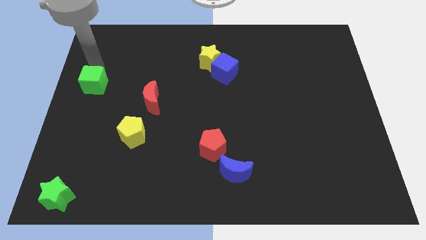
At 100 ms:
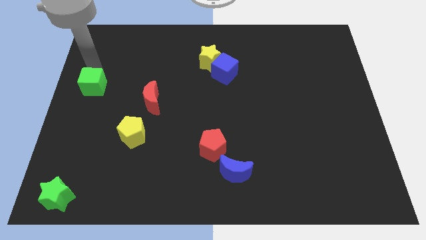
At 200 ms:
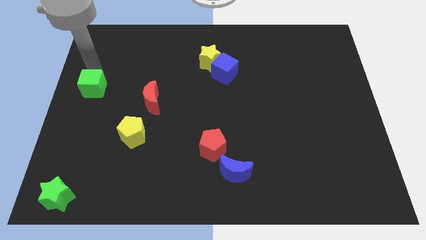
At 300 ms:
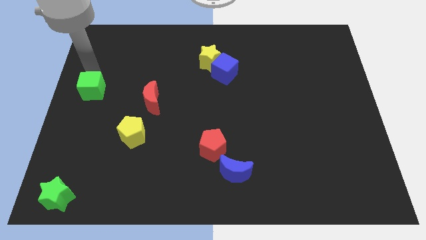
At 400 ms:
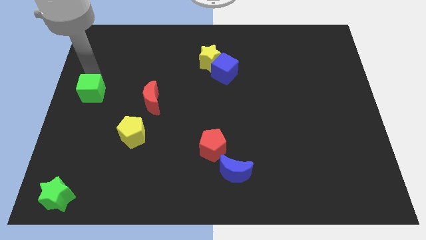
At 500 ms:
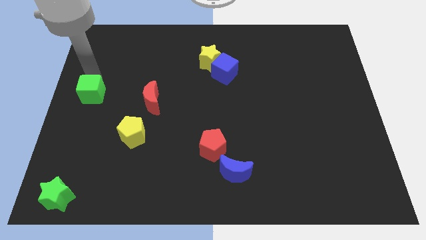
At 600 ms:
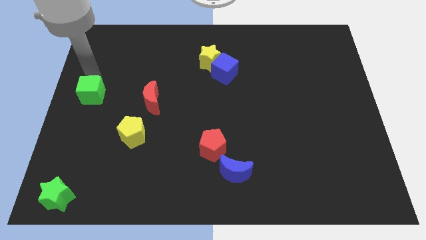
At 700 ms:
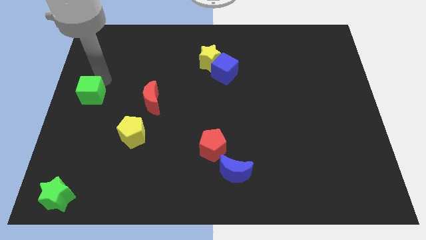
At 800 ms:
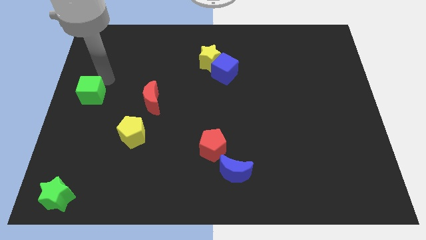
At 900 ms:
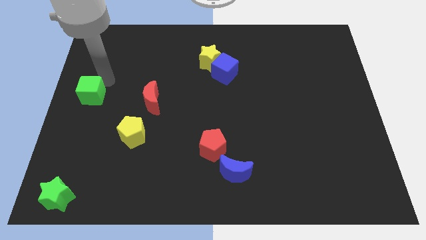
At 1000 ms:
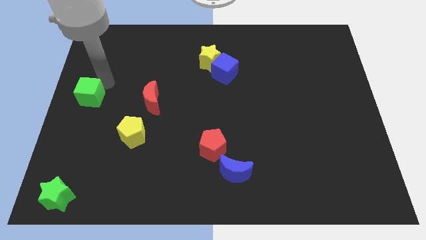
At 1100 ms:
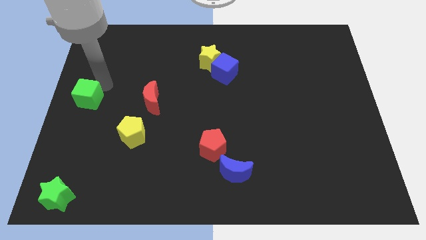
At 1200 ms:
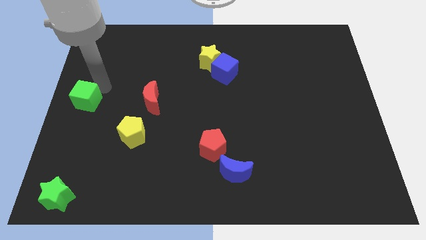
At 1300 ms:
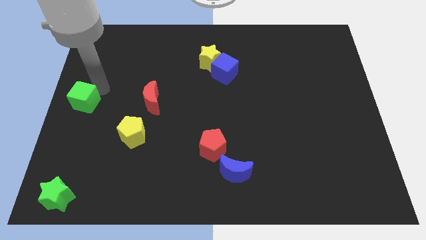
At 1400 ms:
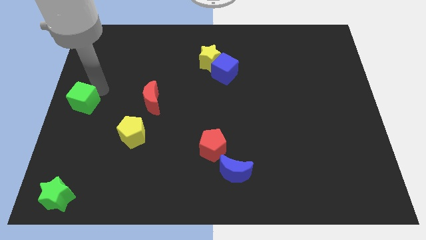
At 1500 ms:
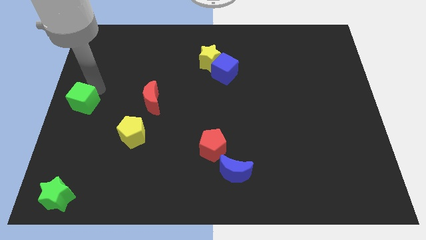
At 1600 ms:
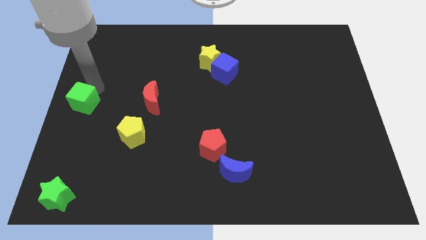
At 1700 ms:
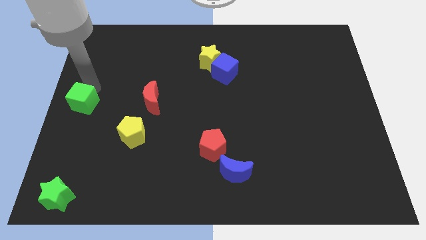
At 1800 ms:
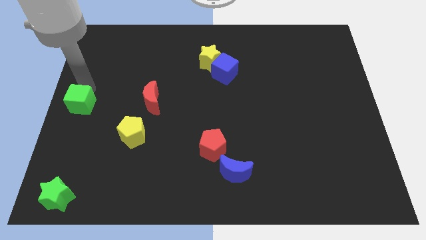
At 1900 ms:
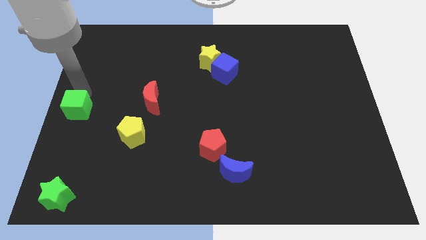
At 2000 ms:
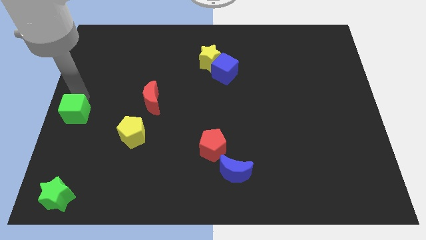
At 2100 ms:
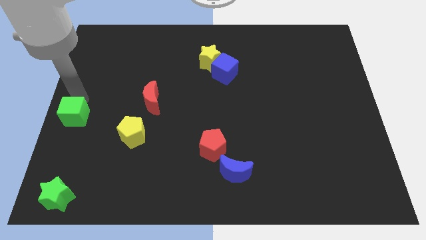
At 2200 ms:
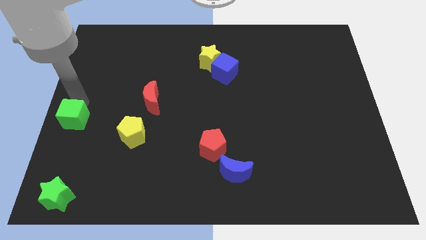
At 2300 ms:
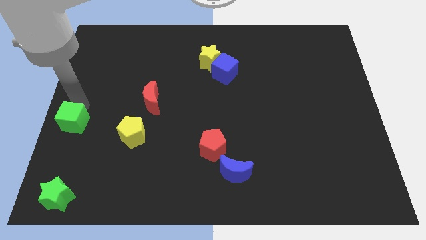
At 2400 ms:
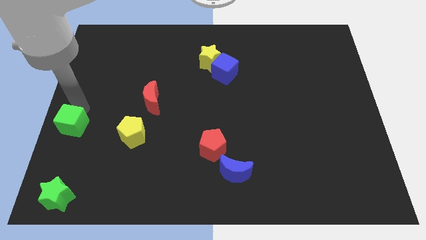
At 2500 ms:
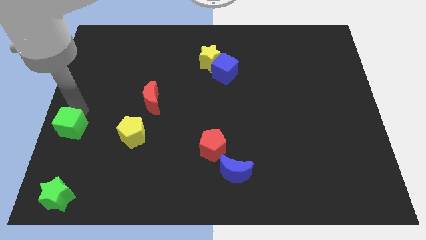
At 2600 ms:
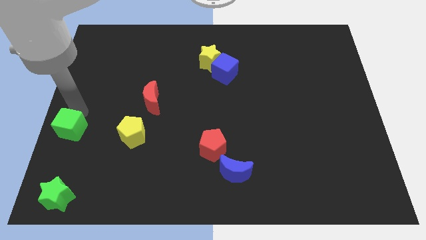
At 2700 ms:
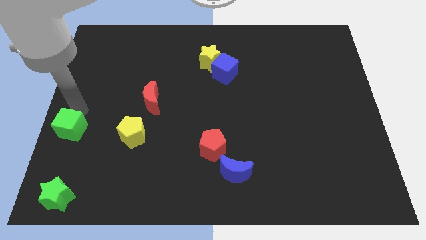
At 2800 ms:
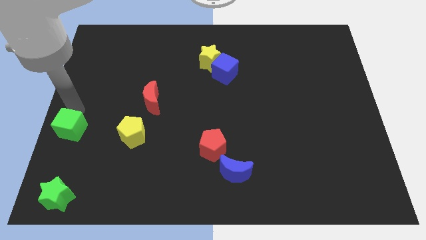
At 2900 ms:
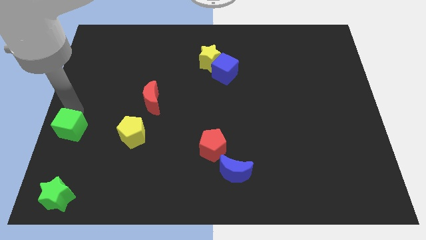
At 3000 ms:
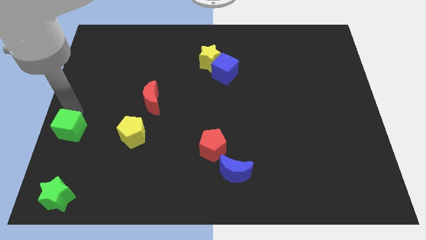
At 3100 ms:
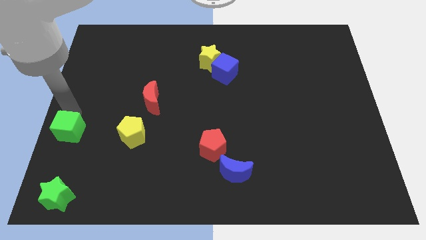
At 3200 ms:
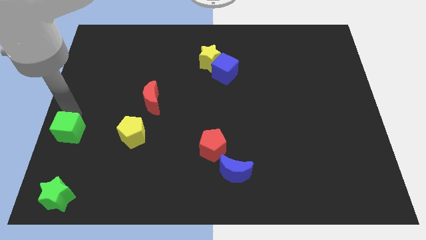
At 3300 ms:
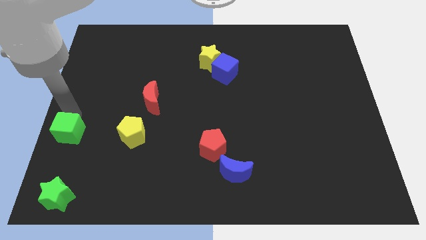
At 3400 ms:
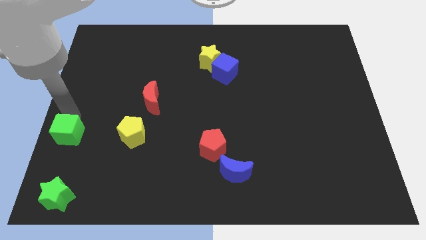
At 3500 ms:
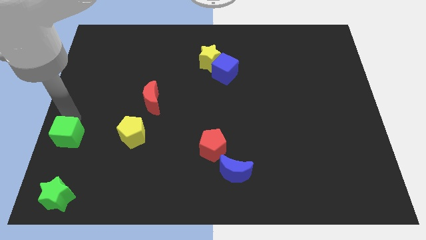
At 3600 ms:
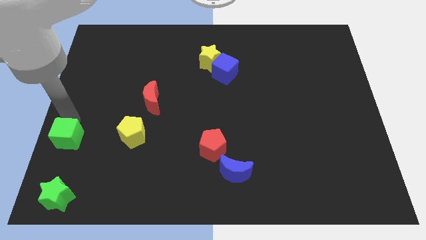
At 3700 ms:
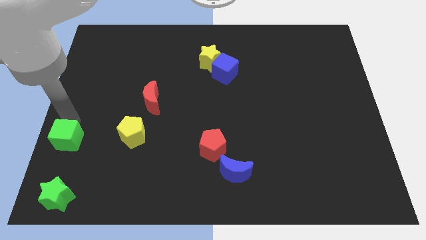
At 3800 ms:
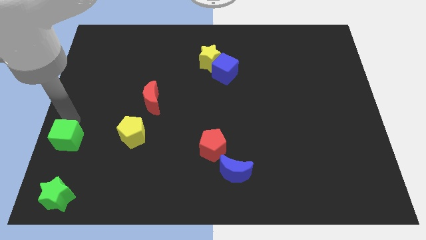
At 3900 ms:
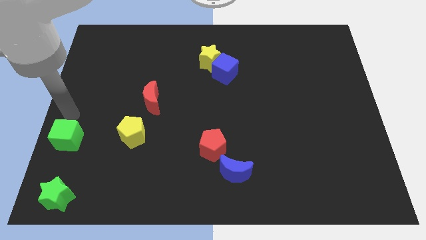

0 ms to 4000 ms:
place the green cube to the left bottom

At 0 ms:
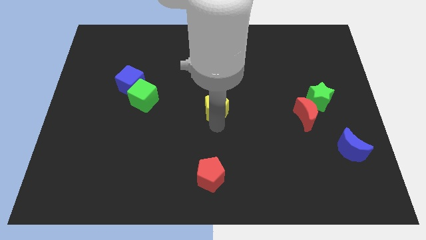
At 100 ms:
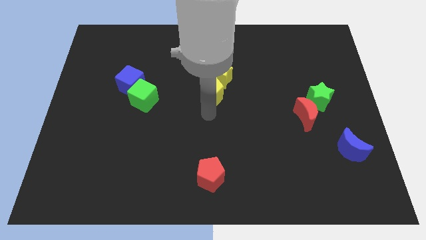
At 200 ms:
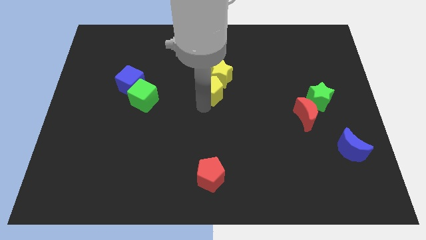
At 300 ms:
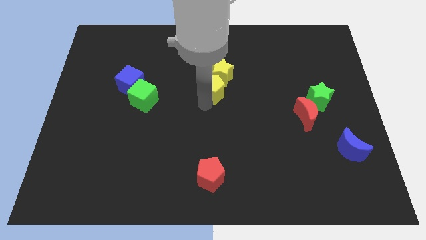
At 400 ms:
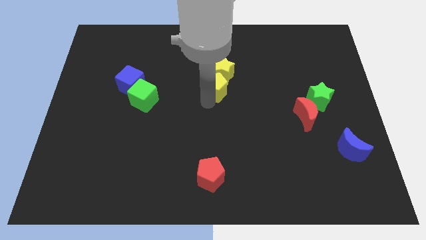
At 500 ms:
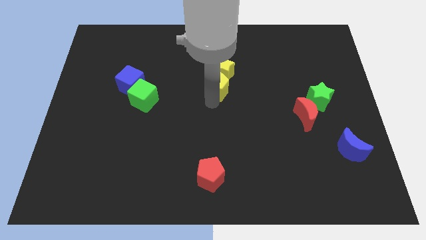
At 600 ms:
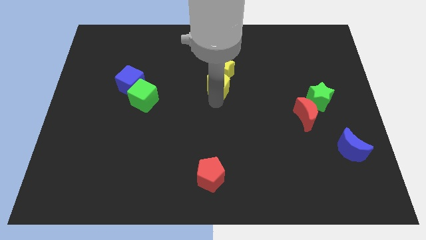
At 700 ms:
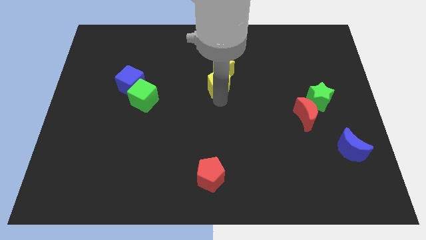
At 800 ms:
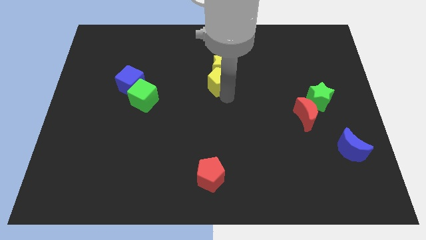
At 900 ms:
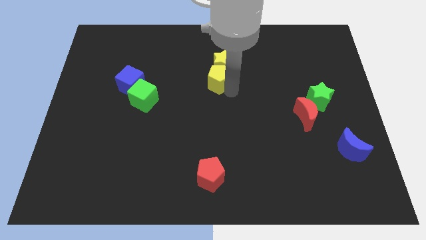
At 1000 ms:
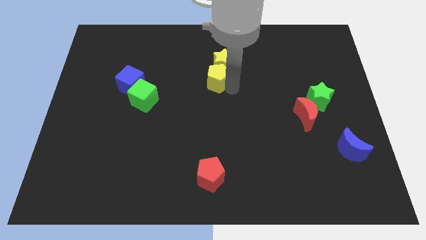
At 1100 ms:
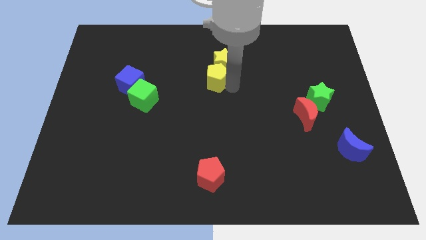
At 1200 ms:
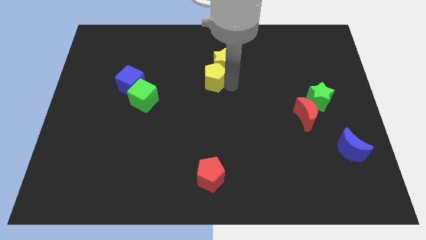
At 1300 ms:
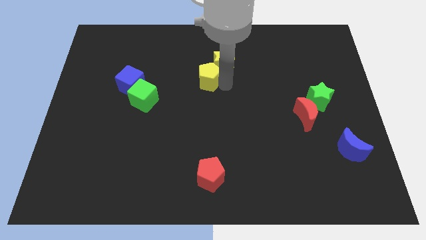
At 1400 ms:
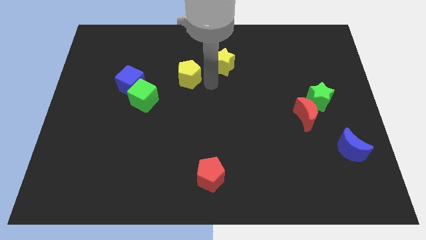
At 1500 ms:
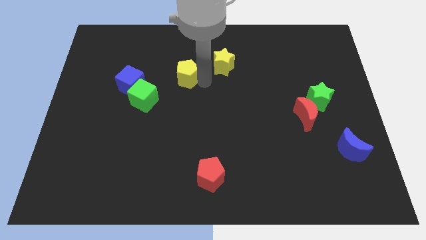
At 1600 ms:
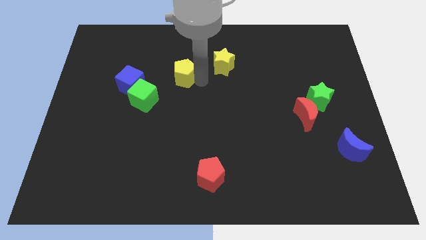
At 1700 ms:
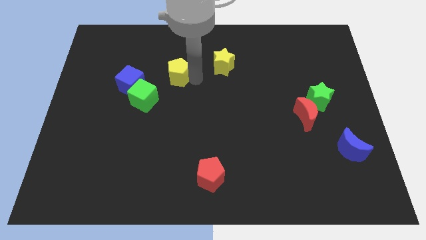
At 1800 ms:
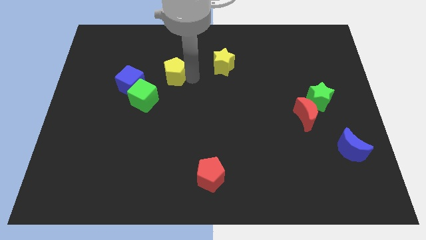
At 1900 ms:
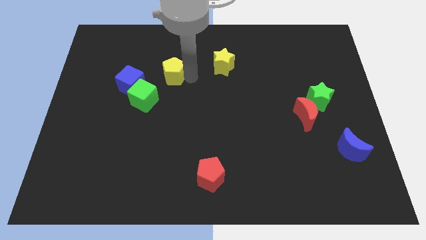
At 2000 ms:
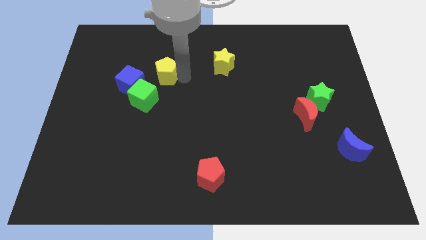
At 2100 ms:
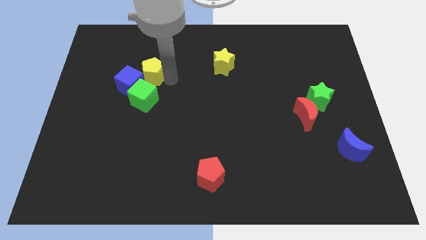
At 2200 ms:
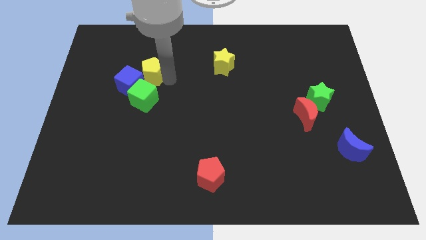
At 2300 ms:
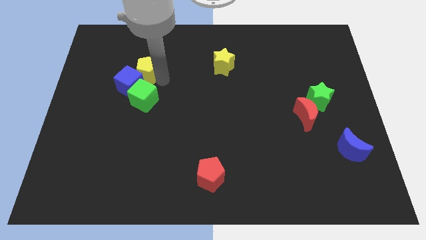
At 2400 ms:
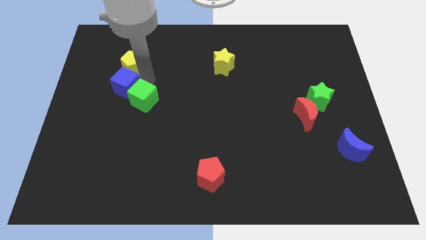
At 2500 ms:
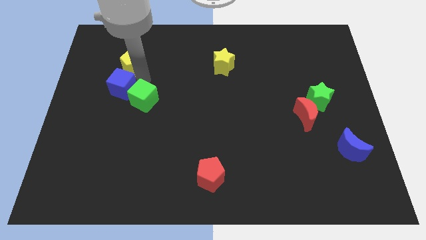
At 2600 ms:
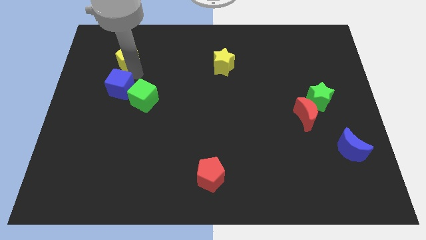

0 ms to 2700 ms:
place yellow pentagon to the top of blue cube

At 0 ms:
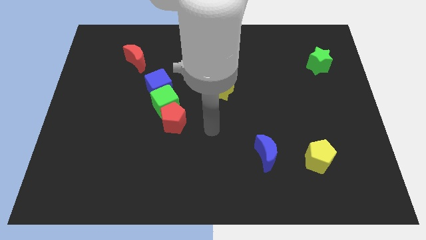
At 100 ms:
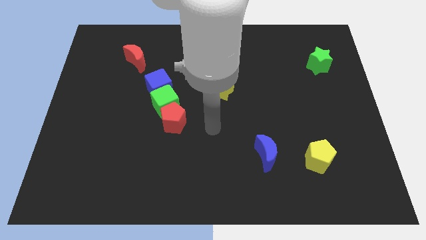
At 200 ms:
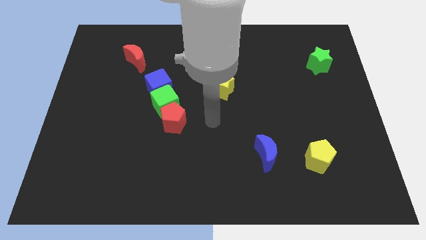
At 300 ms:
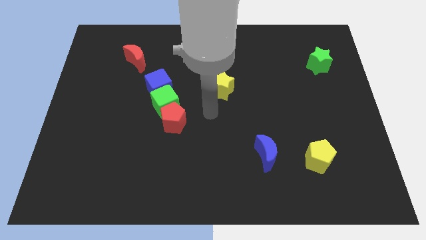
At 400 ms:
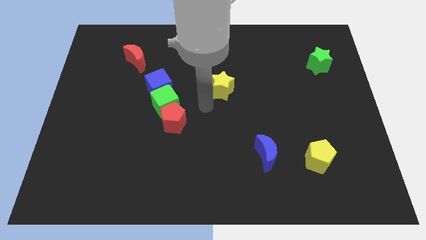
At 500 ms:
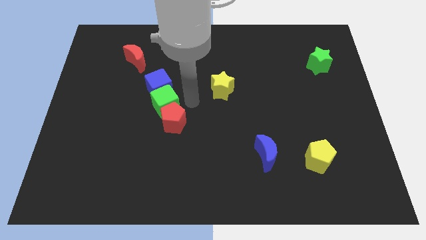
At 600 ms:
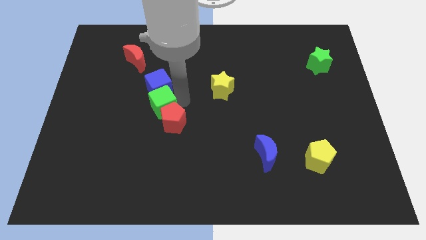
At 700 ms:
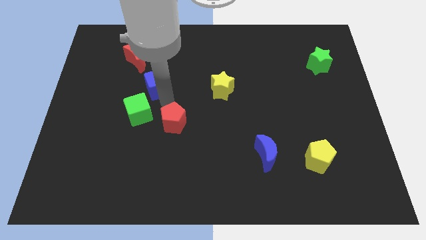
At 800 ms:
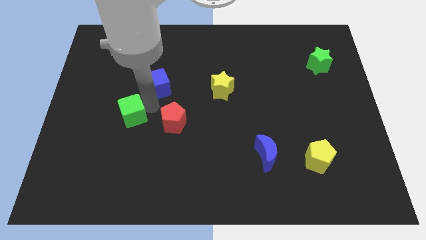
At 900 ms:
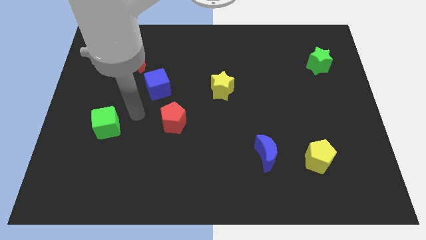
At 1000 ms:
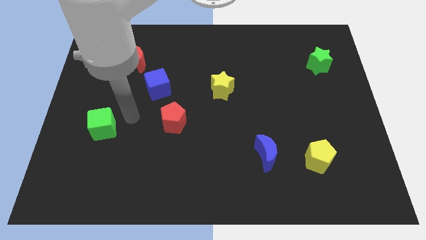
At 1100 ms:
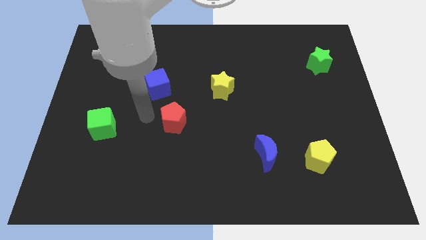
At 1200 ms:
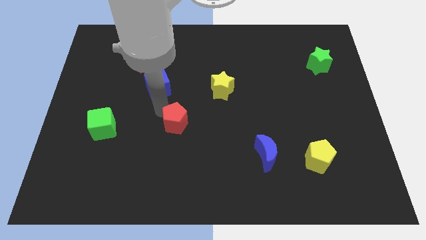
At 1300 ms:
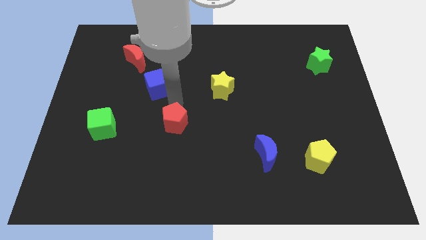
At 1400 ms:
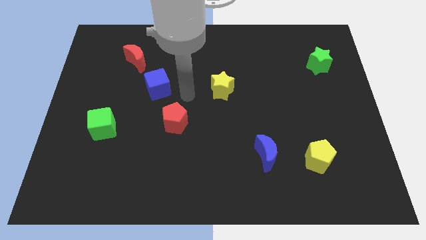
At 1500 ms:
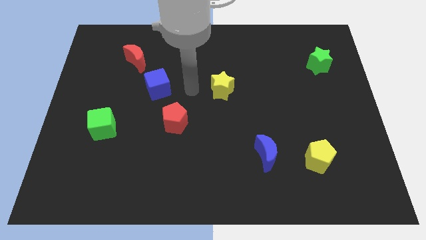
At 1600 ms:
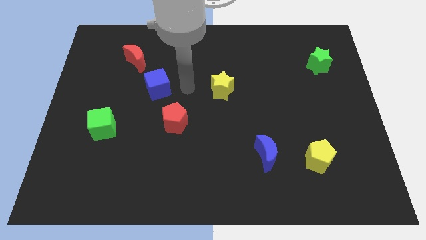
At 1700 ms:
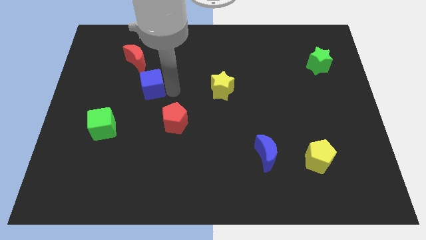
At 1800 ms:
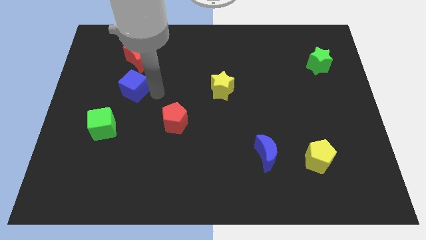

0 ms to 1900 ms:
push the cubes to the left side of the board

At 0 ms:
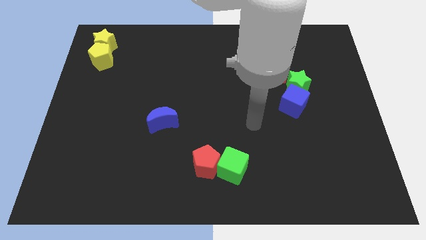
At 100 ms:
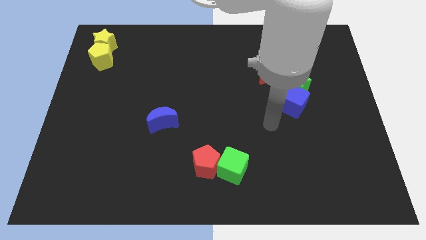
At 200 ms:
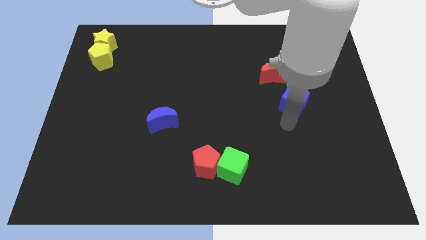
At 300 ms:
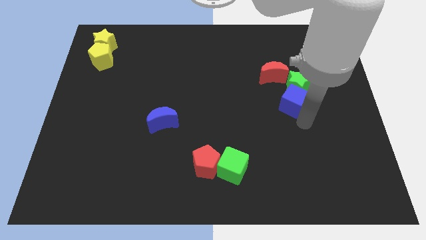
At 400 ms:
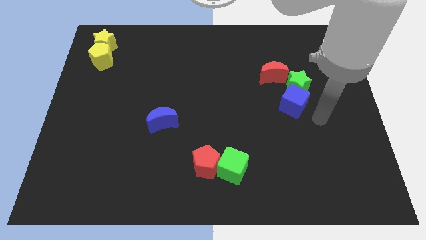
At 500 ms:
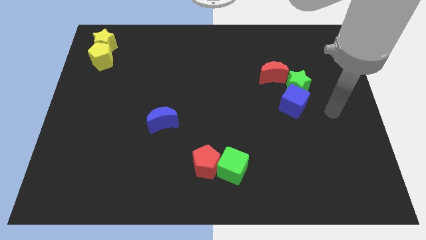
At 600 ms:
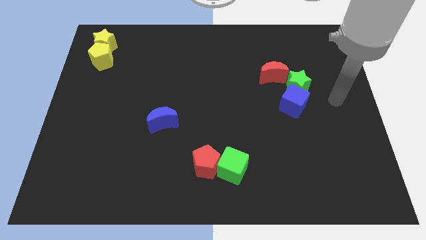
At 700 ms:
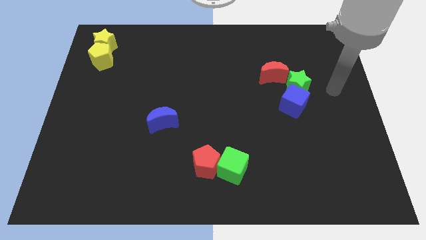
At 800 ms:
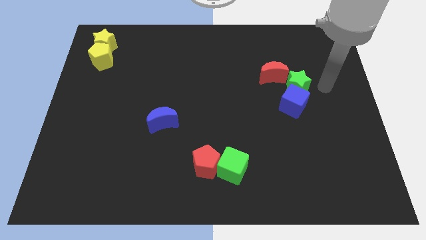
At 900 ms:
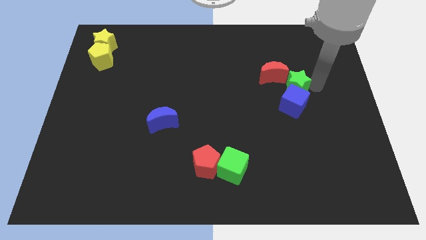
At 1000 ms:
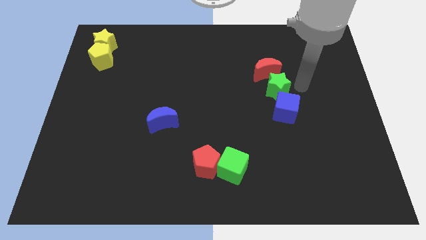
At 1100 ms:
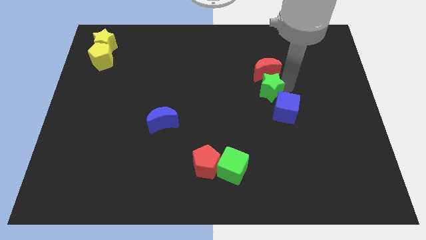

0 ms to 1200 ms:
place green star in between red moon and blue cube
